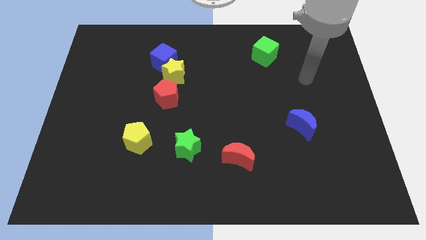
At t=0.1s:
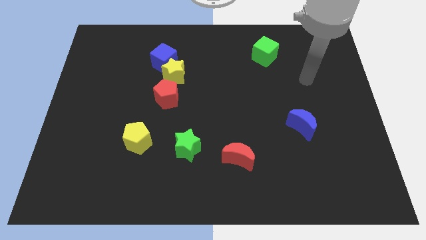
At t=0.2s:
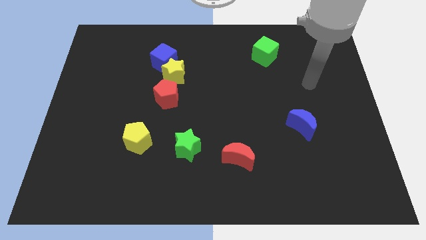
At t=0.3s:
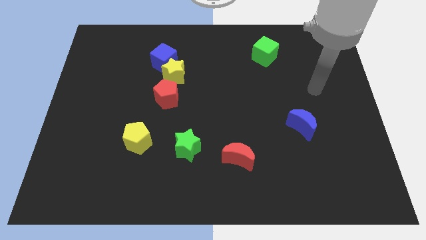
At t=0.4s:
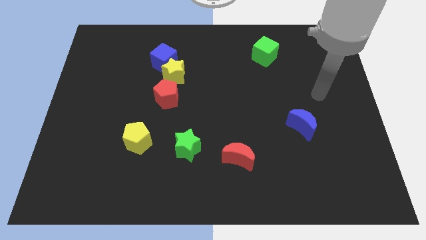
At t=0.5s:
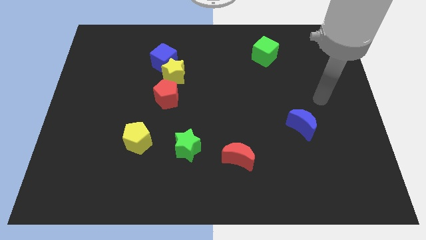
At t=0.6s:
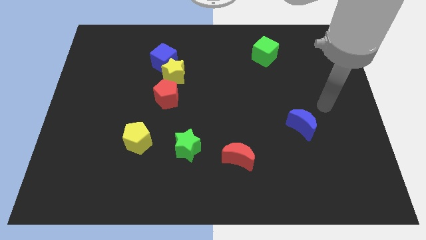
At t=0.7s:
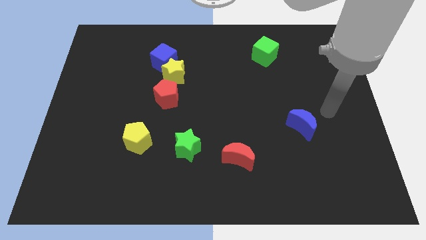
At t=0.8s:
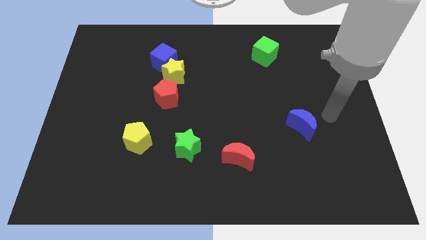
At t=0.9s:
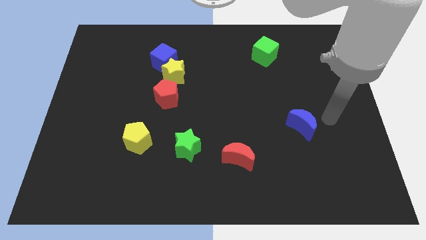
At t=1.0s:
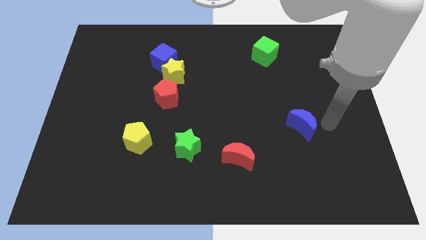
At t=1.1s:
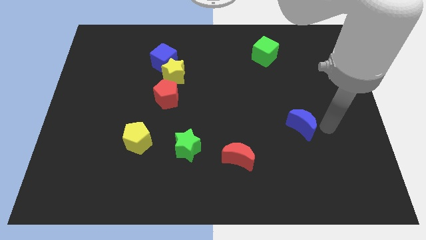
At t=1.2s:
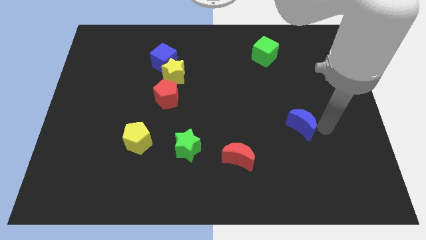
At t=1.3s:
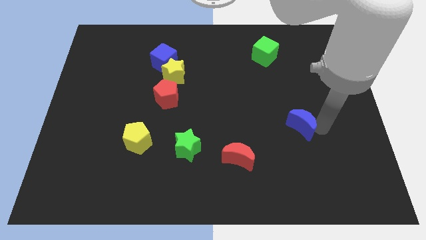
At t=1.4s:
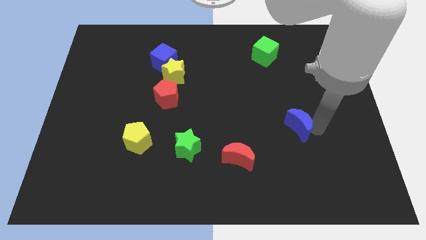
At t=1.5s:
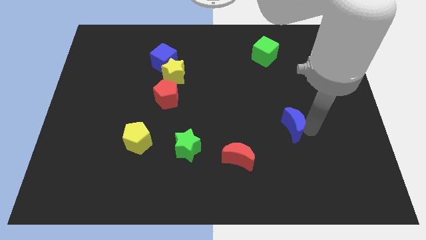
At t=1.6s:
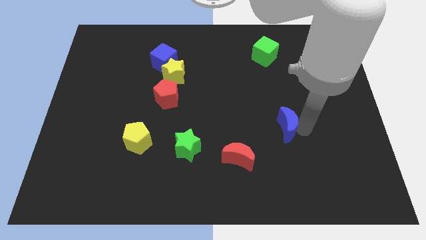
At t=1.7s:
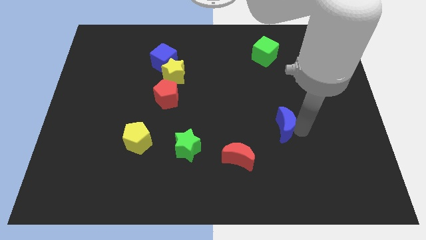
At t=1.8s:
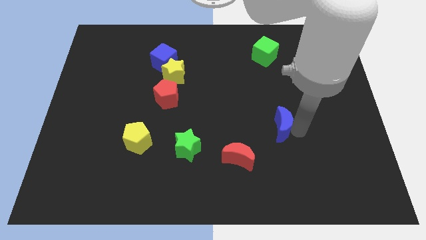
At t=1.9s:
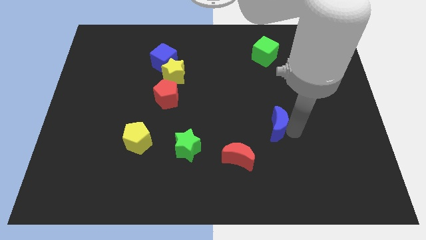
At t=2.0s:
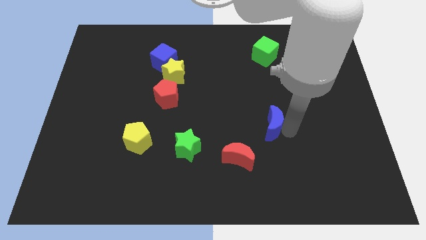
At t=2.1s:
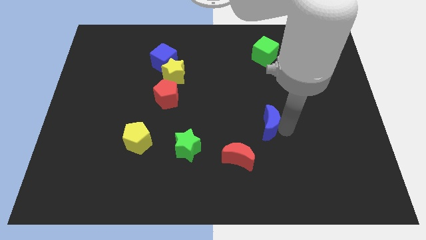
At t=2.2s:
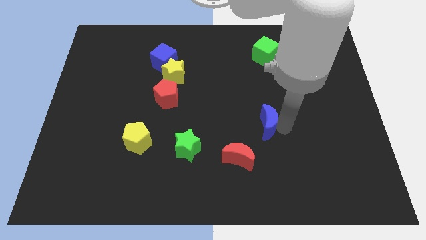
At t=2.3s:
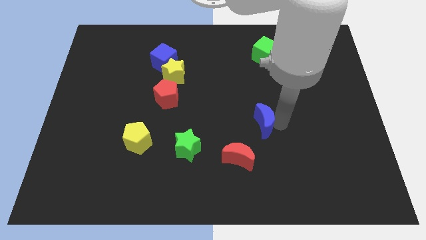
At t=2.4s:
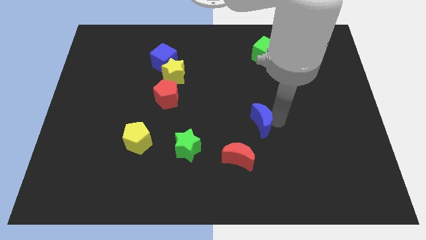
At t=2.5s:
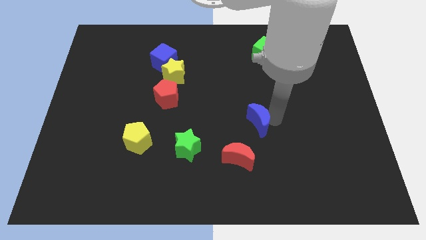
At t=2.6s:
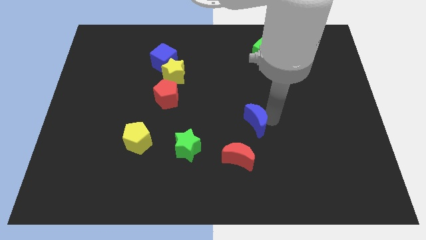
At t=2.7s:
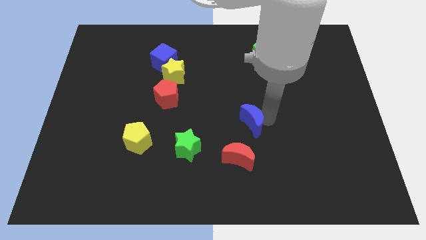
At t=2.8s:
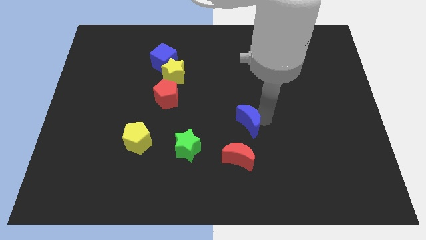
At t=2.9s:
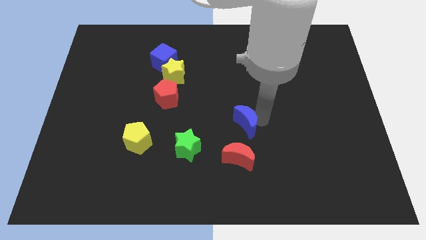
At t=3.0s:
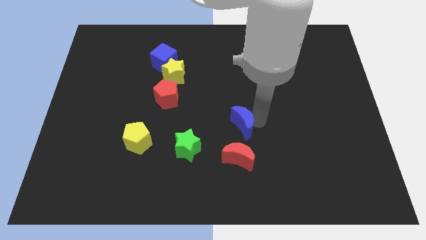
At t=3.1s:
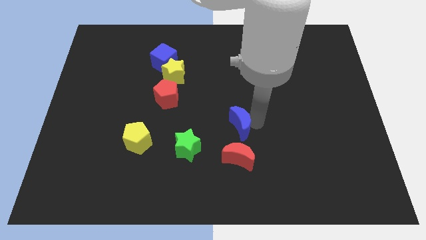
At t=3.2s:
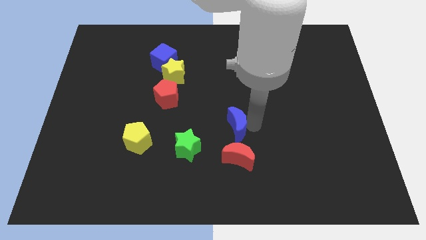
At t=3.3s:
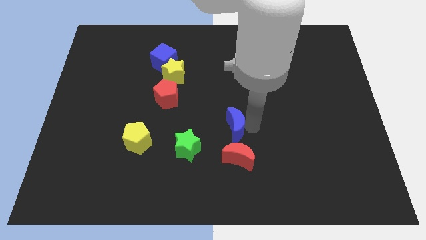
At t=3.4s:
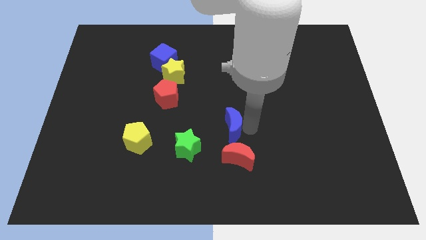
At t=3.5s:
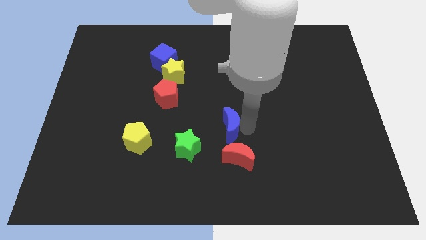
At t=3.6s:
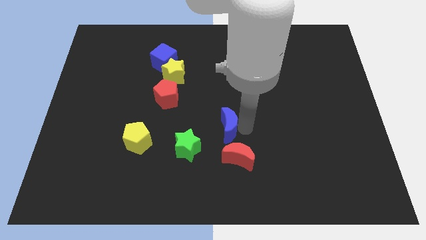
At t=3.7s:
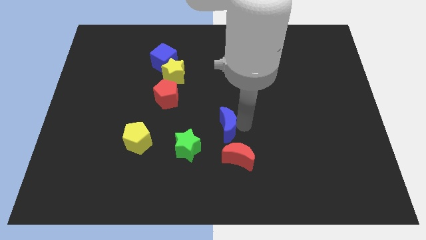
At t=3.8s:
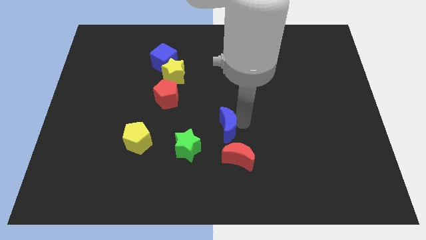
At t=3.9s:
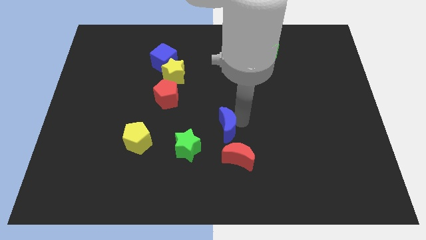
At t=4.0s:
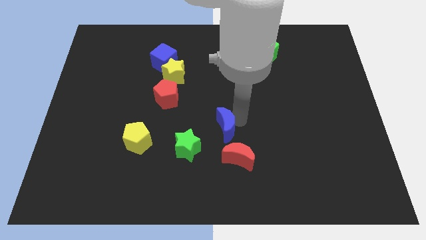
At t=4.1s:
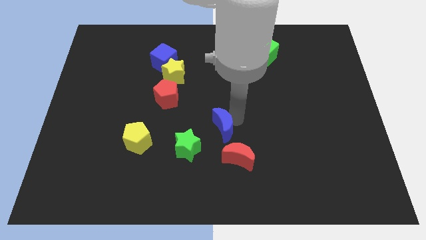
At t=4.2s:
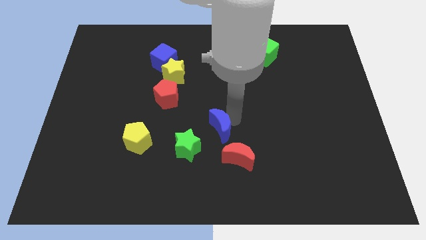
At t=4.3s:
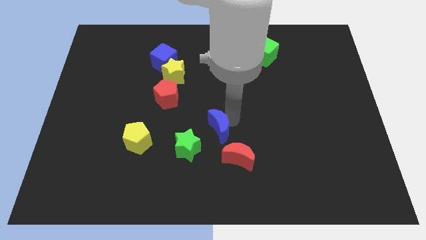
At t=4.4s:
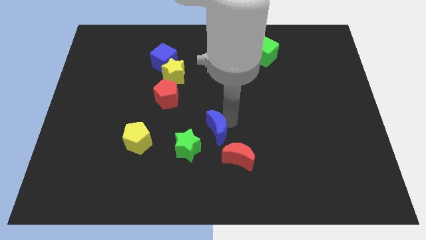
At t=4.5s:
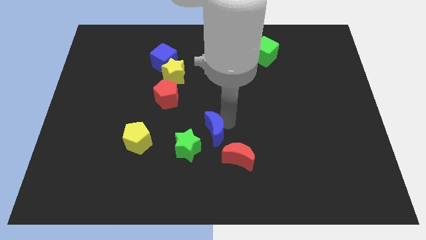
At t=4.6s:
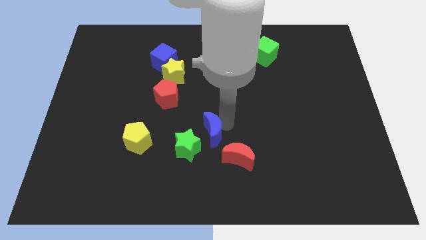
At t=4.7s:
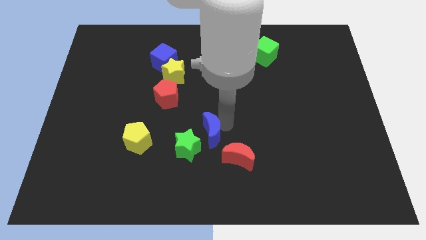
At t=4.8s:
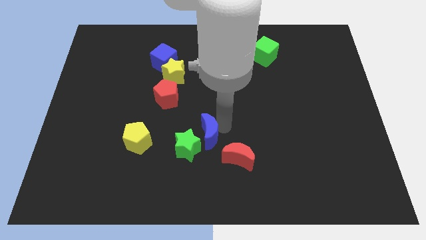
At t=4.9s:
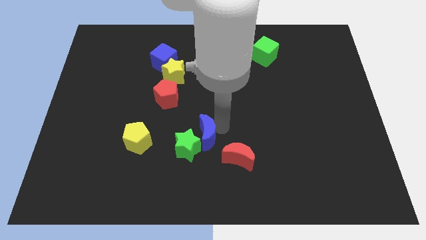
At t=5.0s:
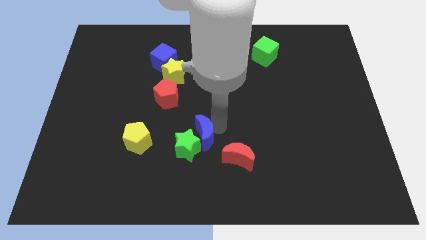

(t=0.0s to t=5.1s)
slide the blue moon close to the green star

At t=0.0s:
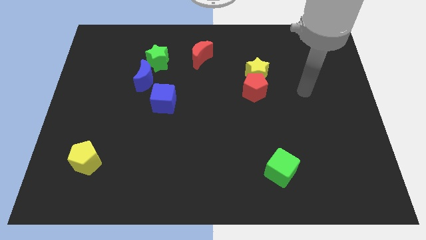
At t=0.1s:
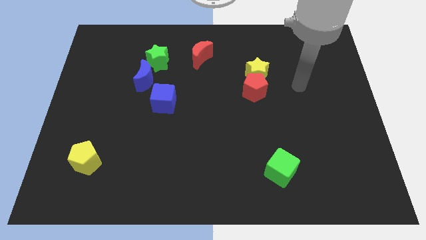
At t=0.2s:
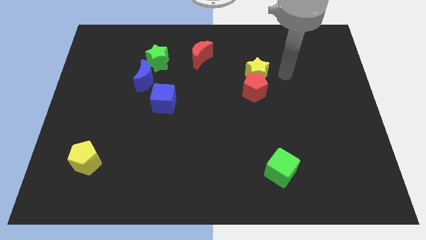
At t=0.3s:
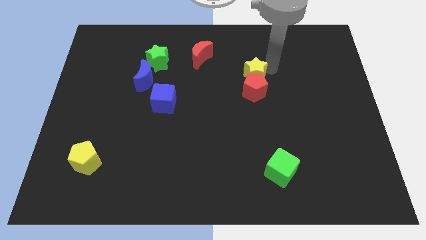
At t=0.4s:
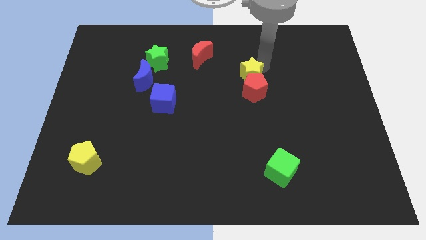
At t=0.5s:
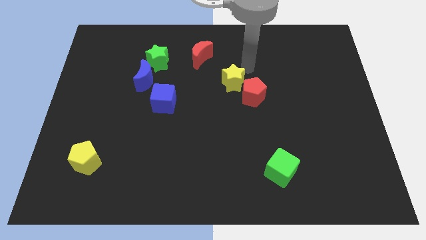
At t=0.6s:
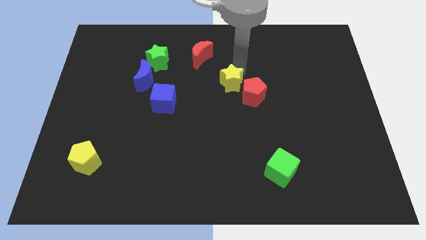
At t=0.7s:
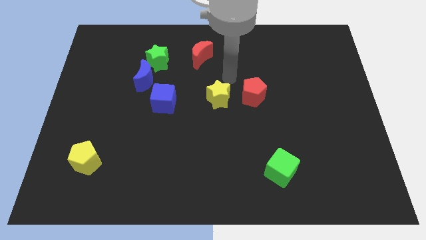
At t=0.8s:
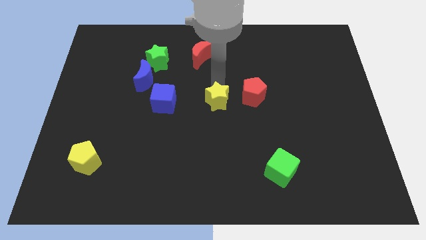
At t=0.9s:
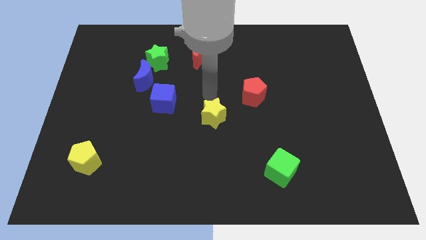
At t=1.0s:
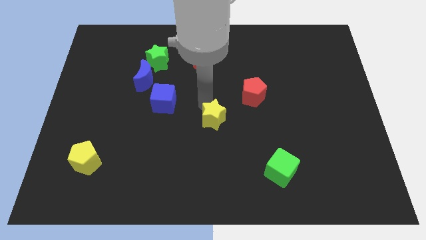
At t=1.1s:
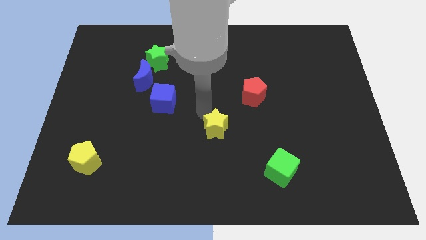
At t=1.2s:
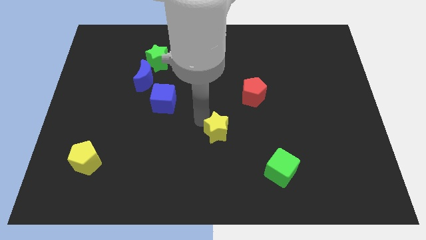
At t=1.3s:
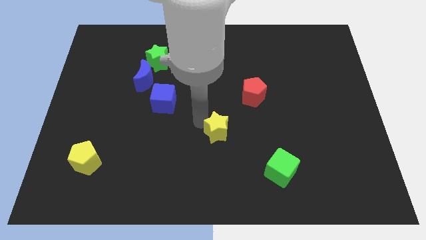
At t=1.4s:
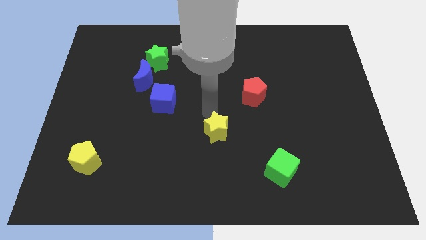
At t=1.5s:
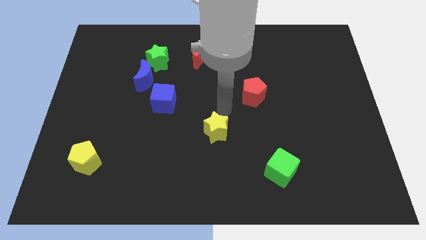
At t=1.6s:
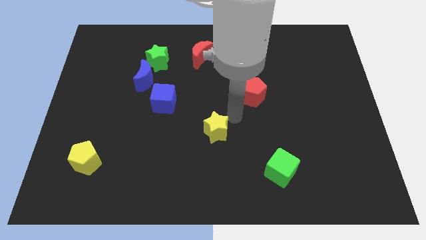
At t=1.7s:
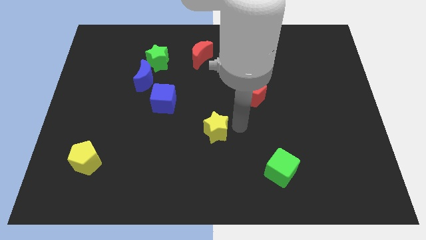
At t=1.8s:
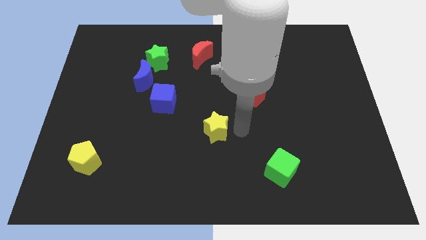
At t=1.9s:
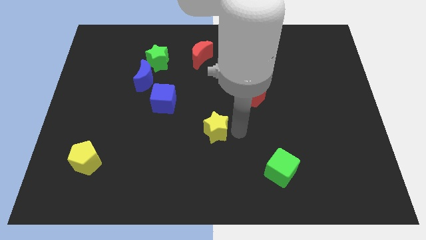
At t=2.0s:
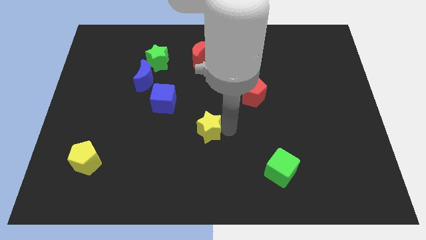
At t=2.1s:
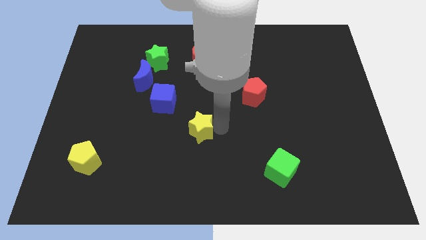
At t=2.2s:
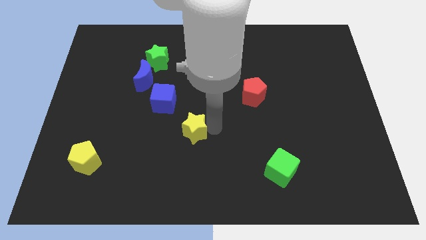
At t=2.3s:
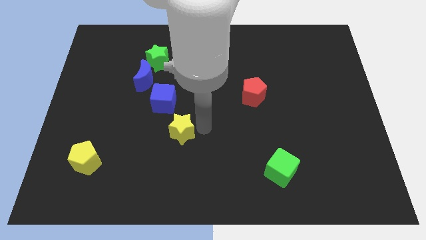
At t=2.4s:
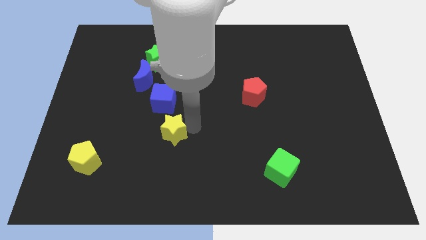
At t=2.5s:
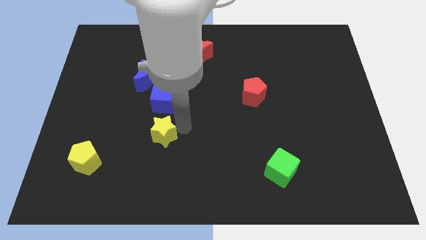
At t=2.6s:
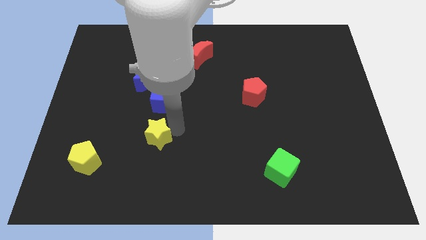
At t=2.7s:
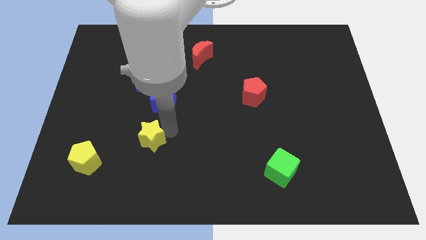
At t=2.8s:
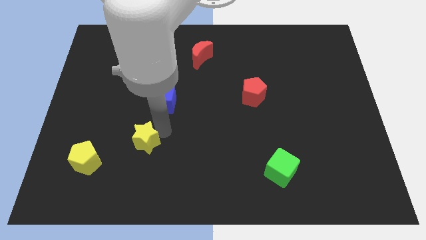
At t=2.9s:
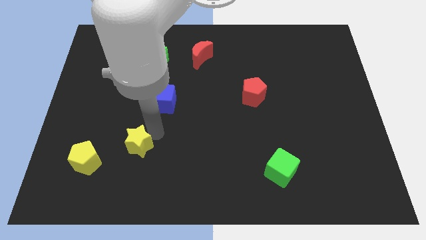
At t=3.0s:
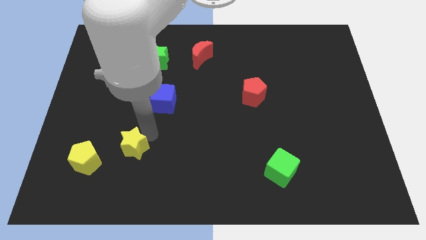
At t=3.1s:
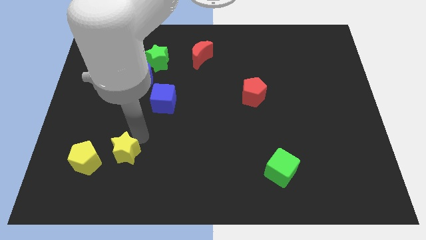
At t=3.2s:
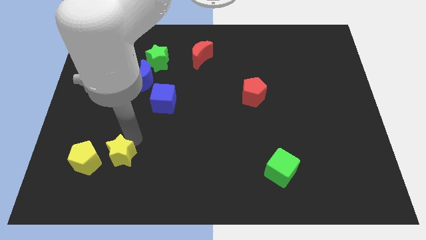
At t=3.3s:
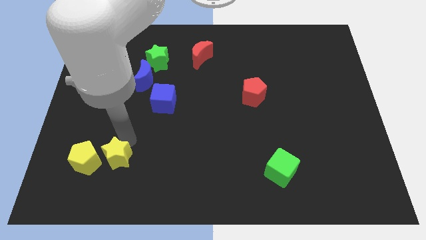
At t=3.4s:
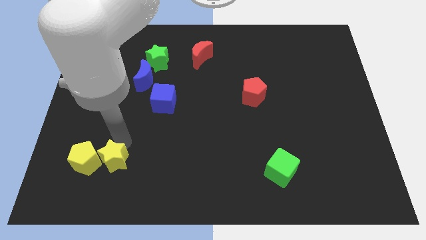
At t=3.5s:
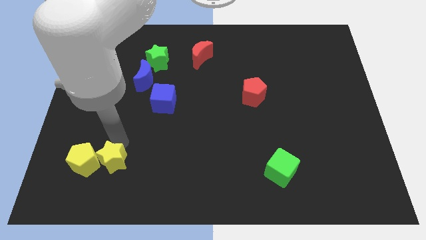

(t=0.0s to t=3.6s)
move the yellow star close to the yellow pentagon
